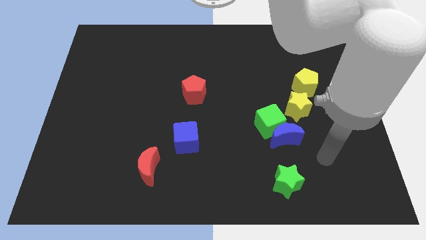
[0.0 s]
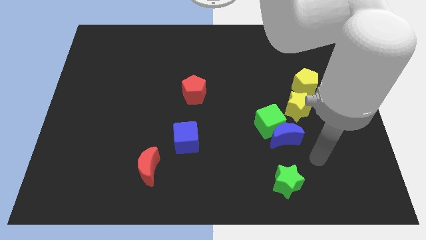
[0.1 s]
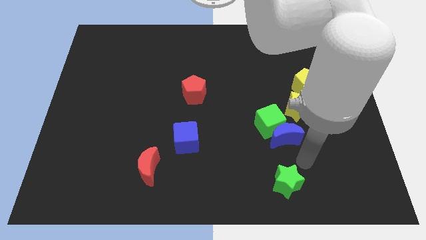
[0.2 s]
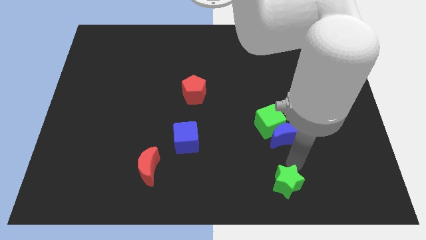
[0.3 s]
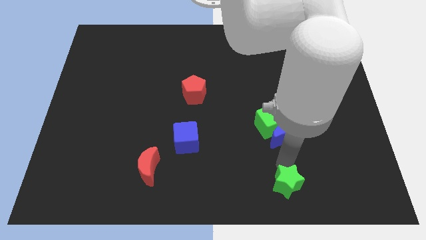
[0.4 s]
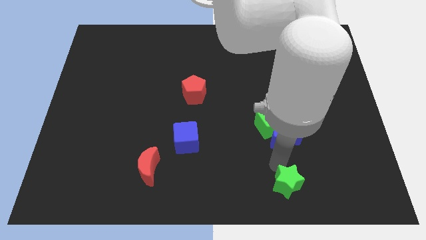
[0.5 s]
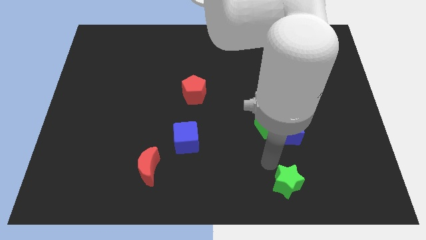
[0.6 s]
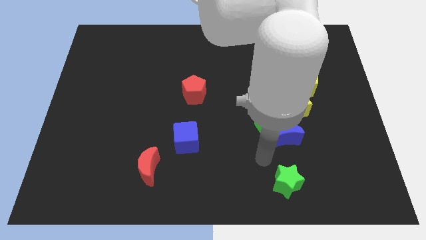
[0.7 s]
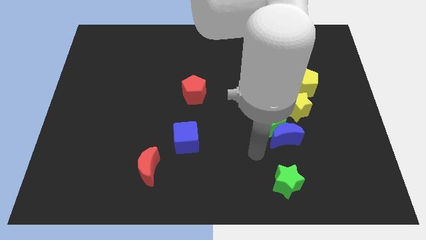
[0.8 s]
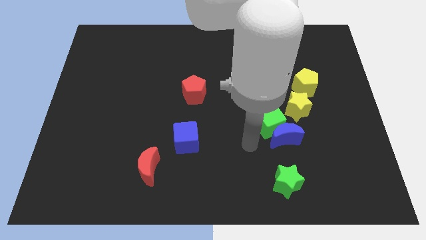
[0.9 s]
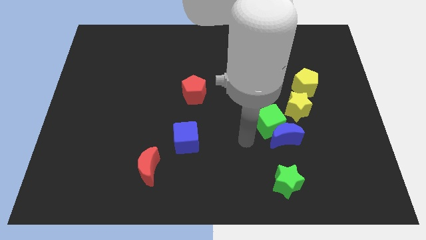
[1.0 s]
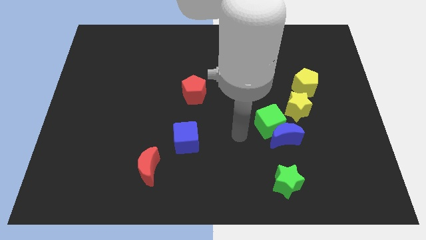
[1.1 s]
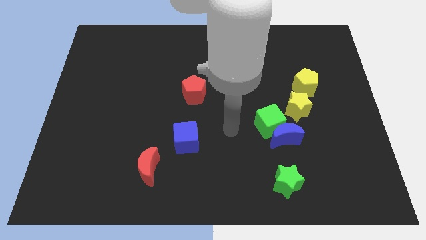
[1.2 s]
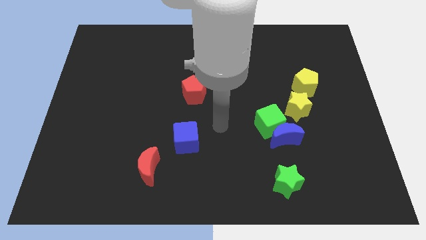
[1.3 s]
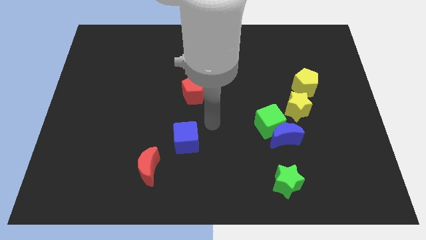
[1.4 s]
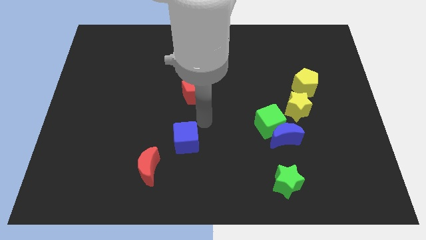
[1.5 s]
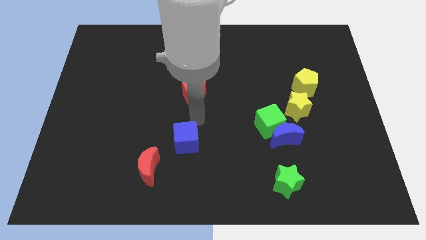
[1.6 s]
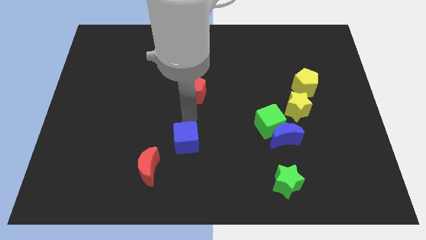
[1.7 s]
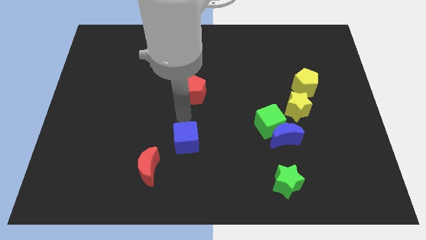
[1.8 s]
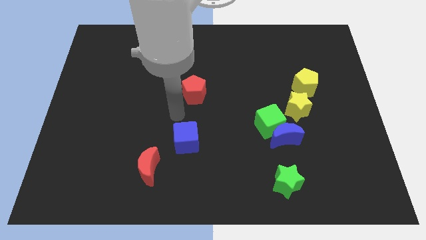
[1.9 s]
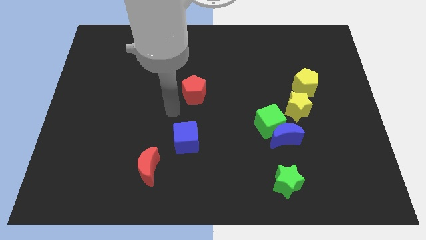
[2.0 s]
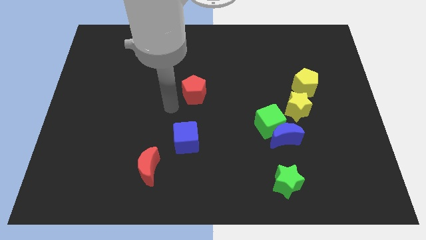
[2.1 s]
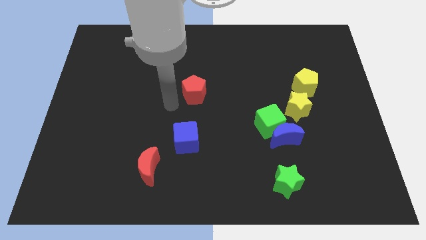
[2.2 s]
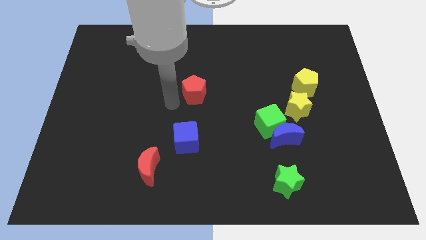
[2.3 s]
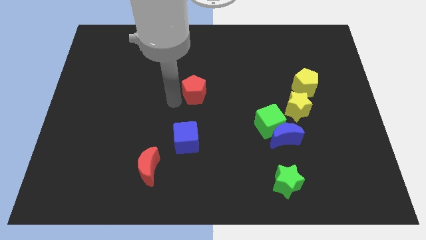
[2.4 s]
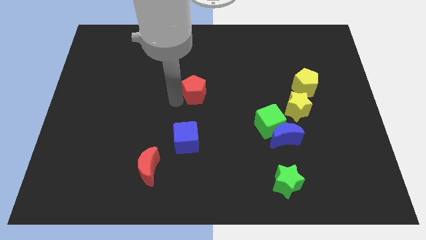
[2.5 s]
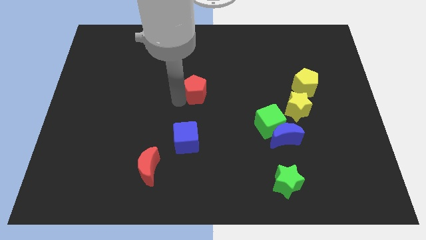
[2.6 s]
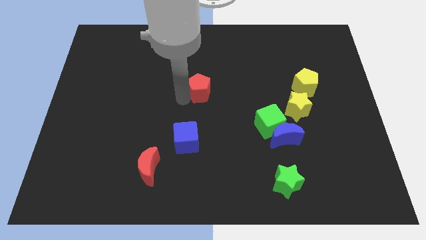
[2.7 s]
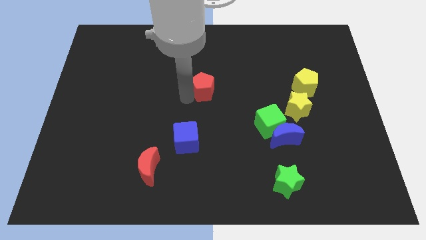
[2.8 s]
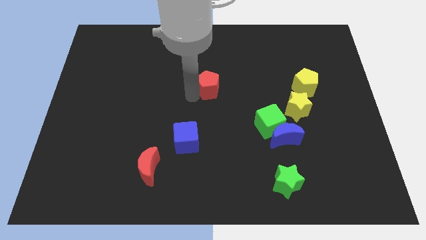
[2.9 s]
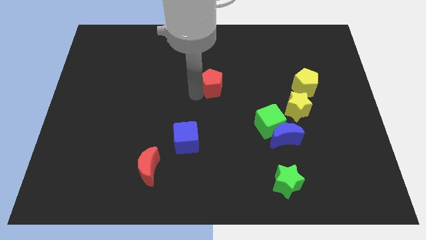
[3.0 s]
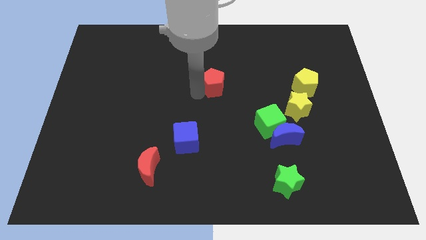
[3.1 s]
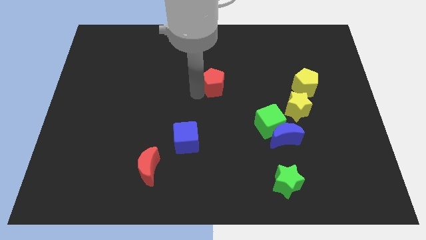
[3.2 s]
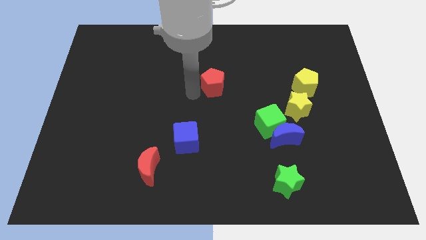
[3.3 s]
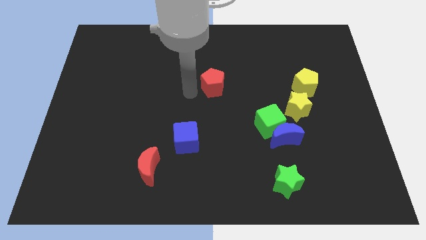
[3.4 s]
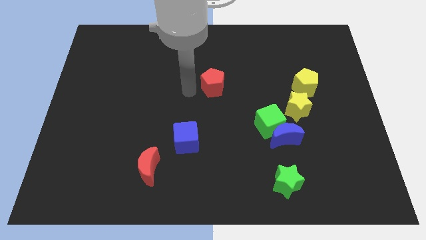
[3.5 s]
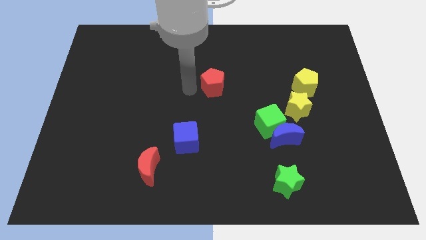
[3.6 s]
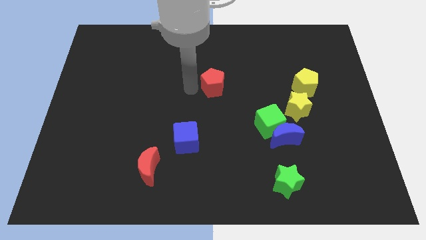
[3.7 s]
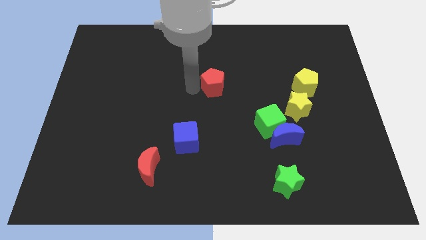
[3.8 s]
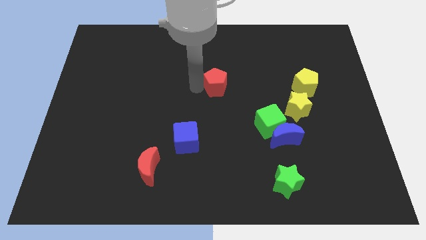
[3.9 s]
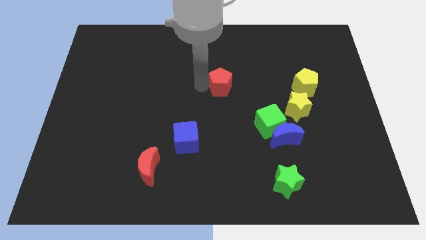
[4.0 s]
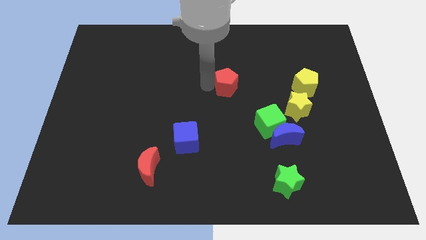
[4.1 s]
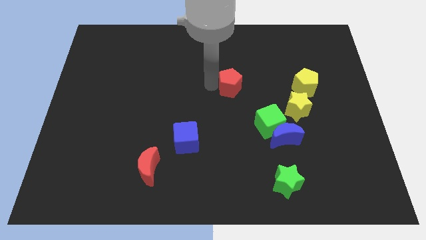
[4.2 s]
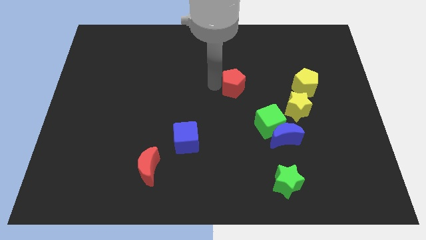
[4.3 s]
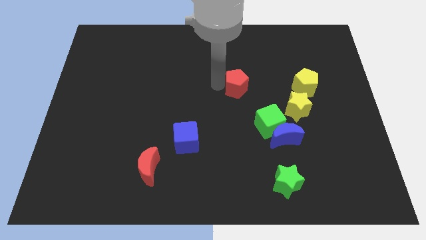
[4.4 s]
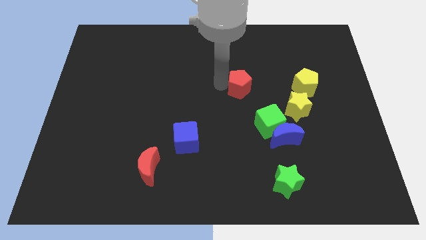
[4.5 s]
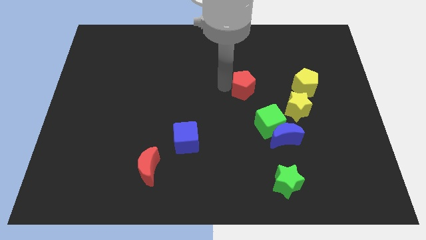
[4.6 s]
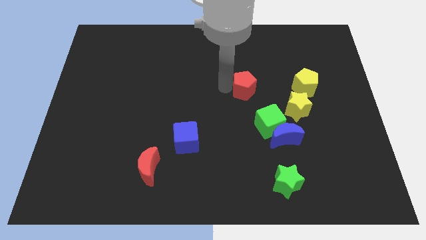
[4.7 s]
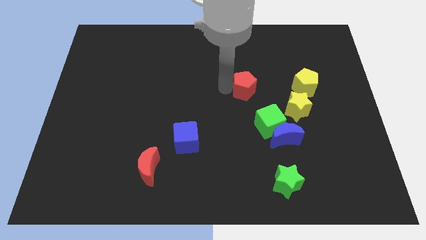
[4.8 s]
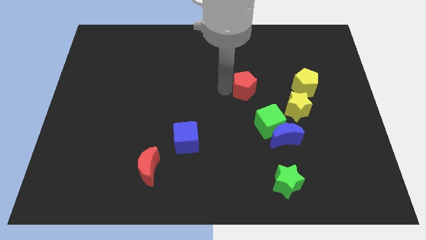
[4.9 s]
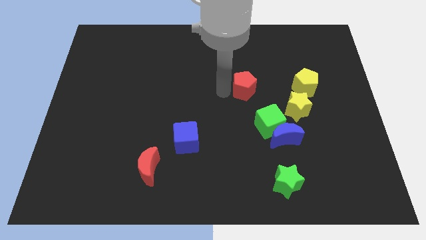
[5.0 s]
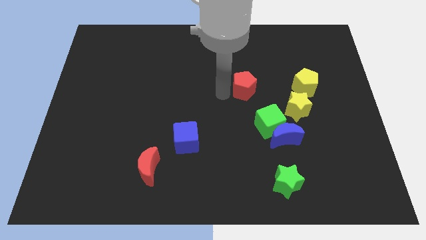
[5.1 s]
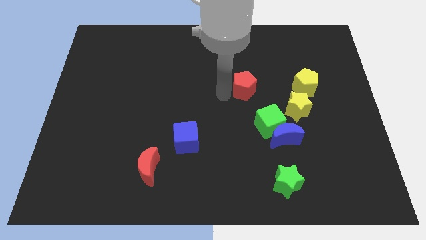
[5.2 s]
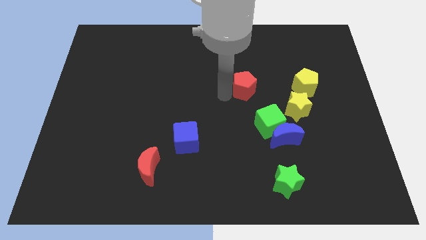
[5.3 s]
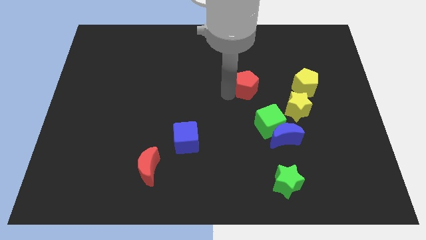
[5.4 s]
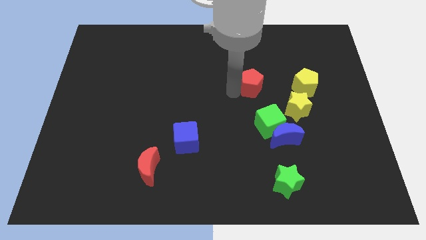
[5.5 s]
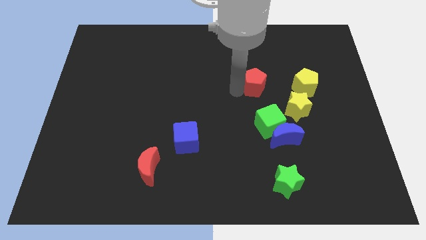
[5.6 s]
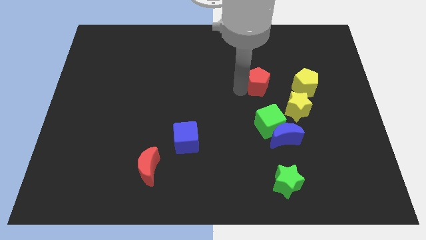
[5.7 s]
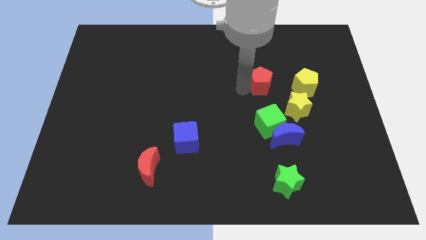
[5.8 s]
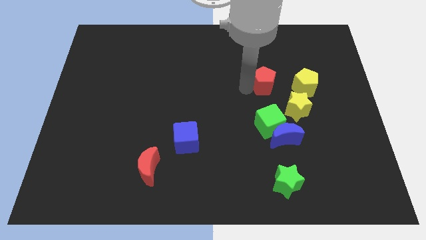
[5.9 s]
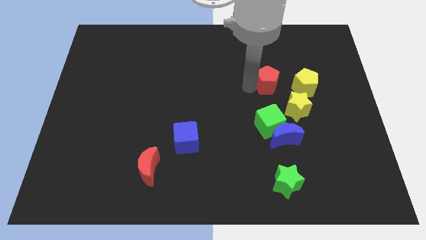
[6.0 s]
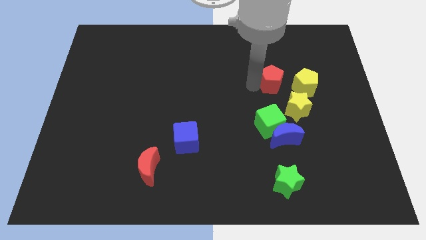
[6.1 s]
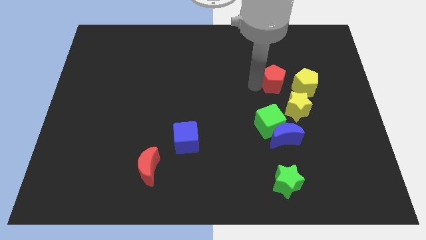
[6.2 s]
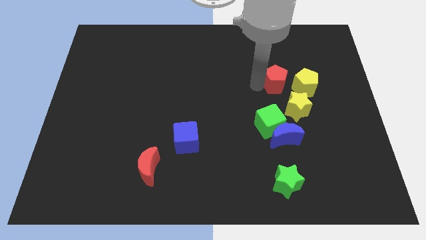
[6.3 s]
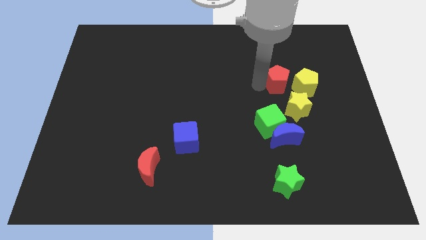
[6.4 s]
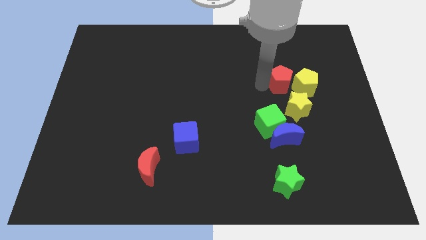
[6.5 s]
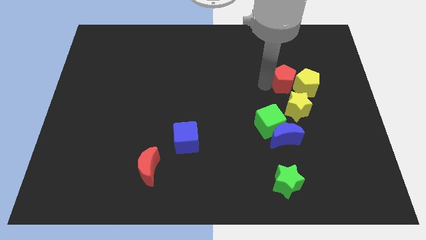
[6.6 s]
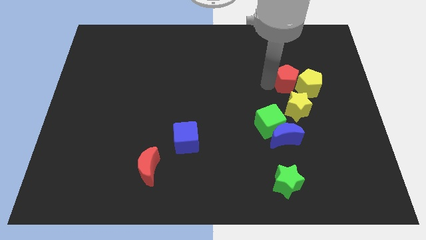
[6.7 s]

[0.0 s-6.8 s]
move the red pentagon next to the yellow pentagon

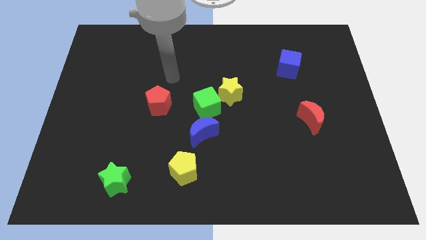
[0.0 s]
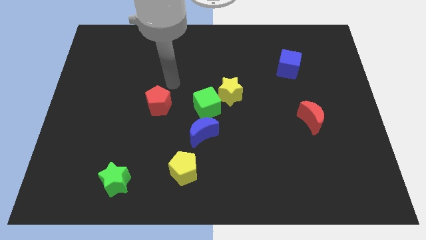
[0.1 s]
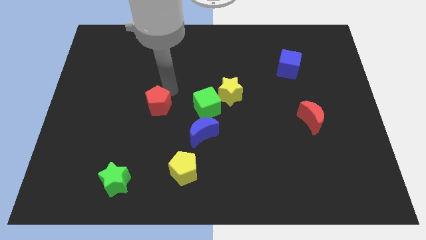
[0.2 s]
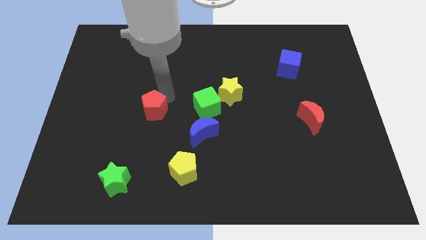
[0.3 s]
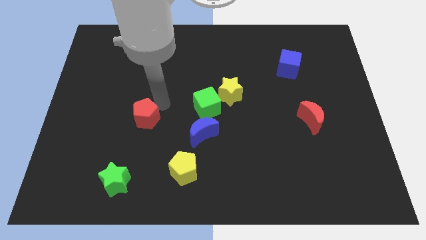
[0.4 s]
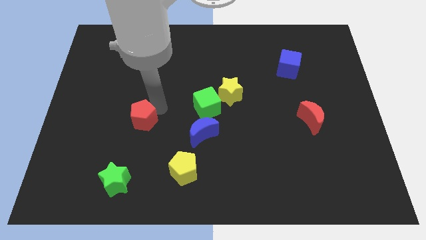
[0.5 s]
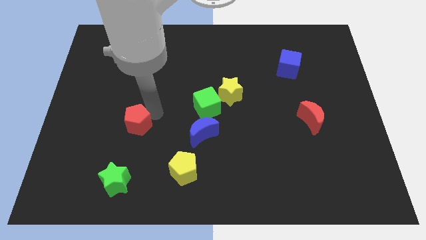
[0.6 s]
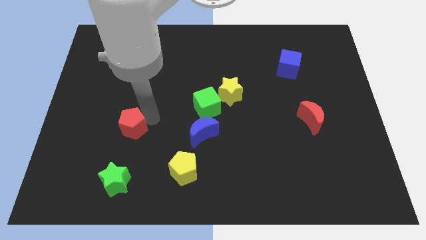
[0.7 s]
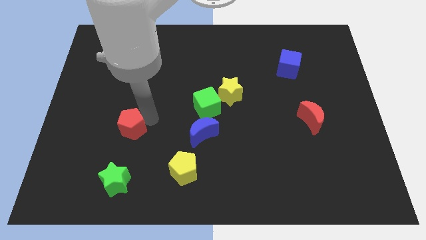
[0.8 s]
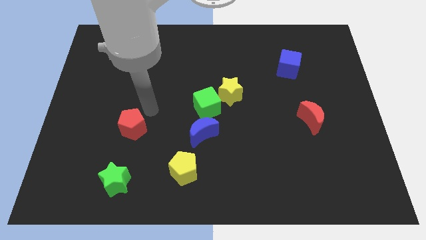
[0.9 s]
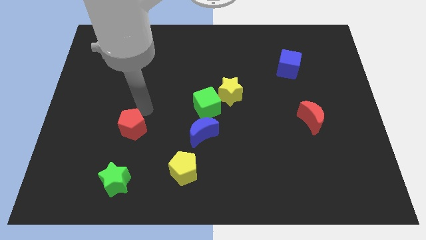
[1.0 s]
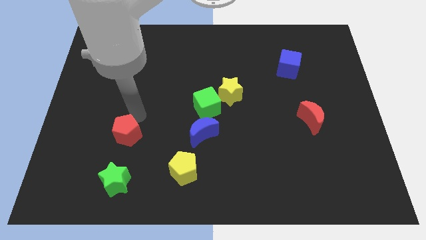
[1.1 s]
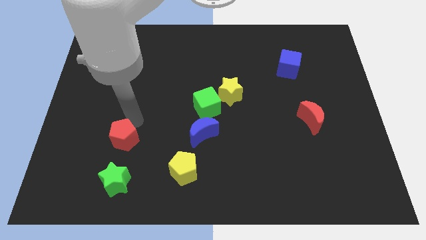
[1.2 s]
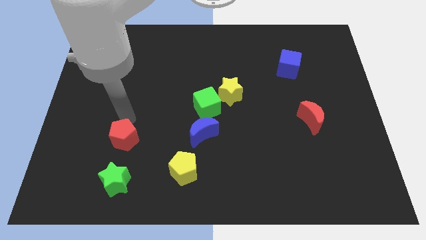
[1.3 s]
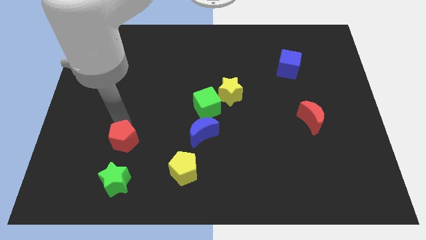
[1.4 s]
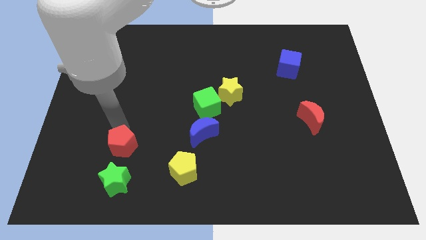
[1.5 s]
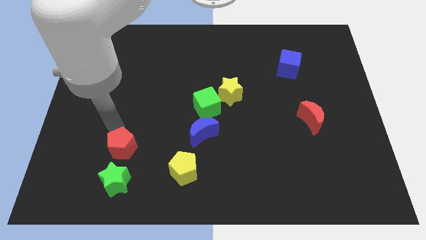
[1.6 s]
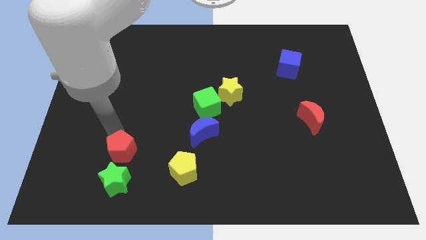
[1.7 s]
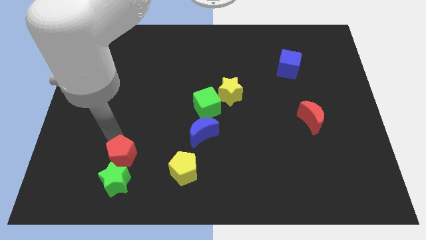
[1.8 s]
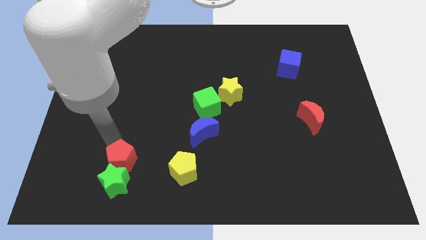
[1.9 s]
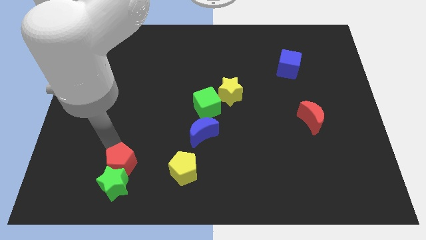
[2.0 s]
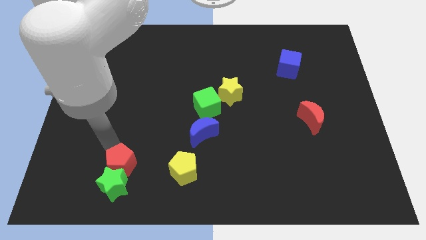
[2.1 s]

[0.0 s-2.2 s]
move the red pentagon towards the green star
